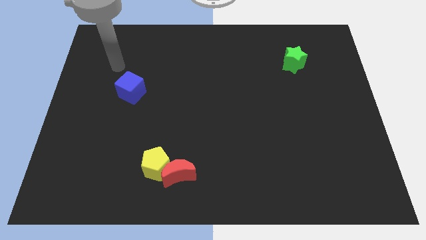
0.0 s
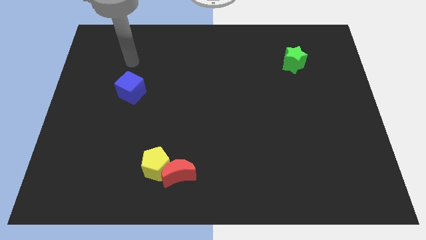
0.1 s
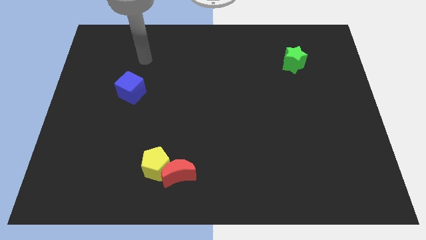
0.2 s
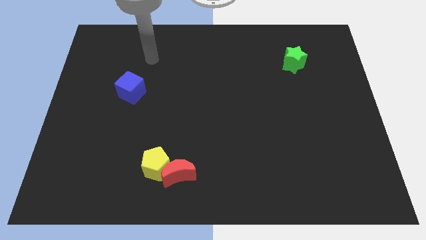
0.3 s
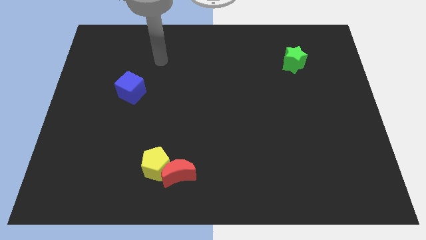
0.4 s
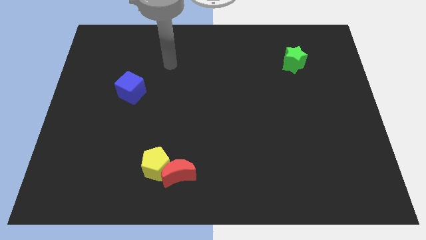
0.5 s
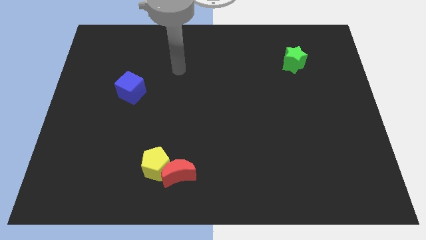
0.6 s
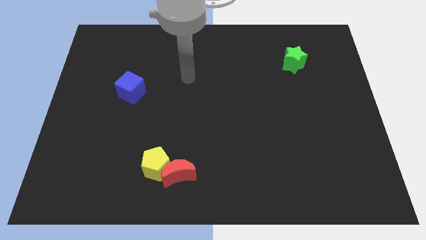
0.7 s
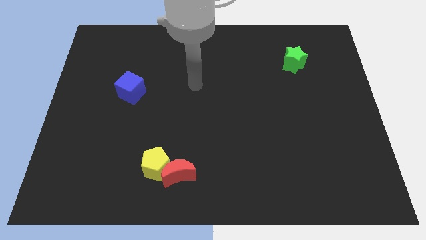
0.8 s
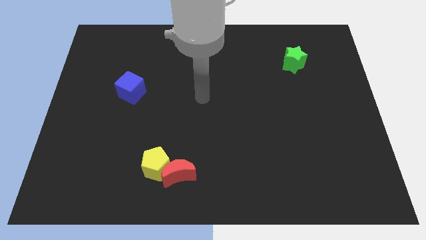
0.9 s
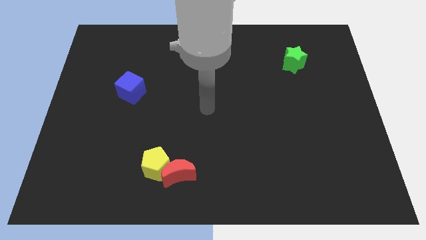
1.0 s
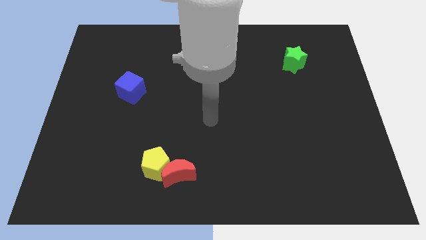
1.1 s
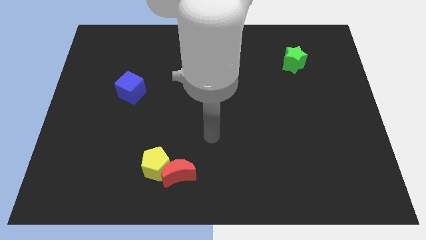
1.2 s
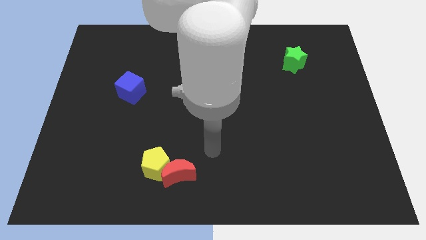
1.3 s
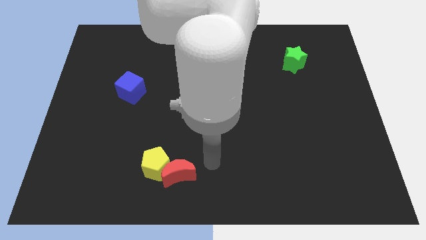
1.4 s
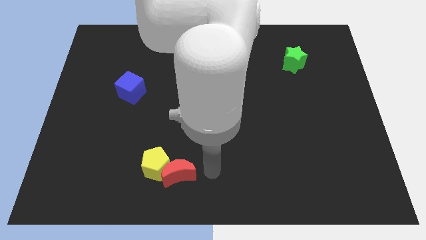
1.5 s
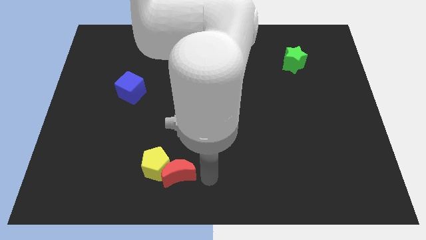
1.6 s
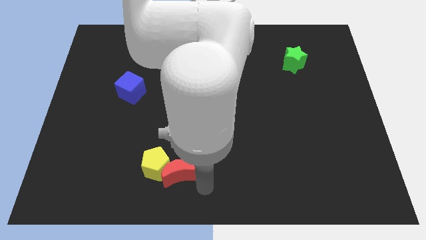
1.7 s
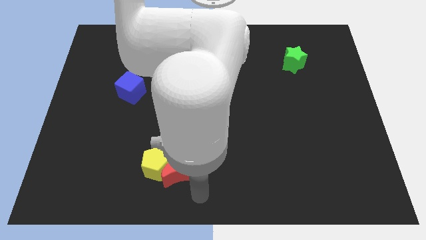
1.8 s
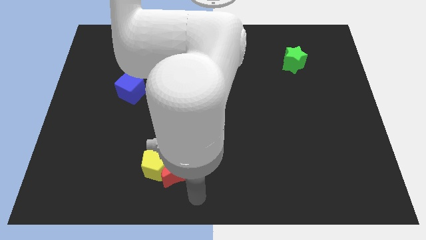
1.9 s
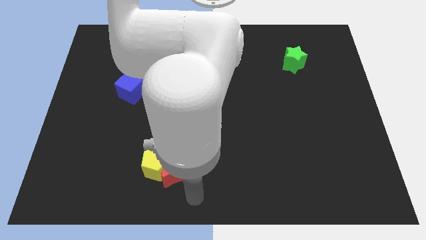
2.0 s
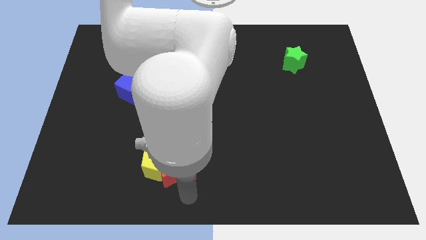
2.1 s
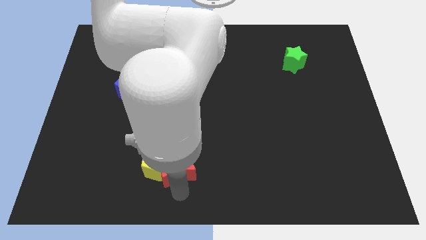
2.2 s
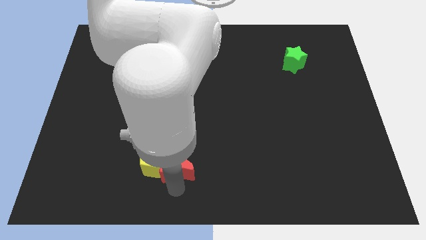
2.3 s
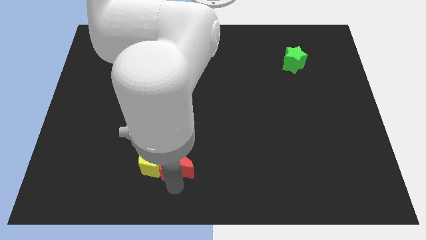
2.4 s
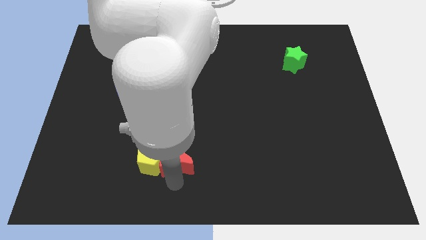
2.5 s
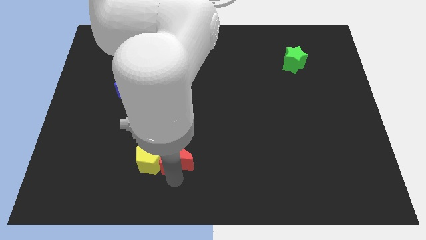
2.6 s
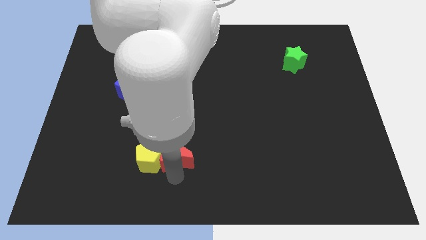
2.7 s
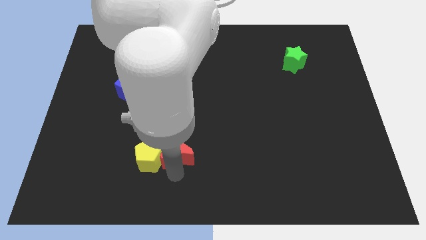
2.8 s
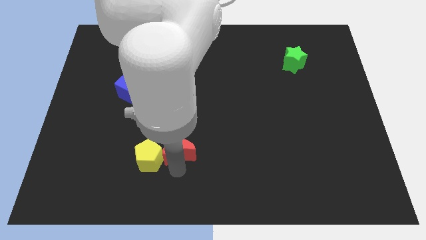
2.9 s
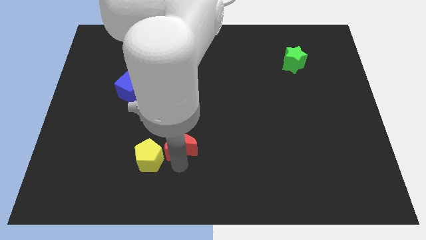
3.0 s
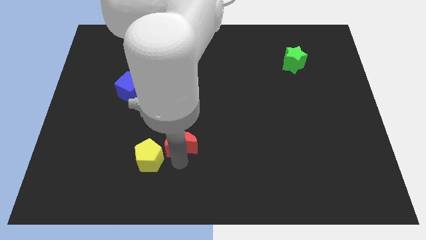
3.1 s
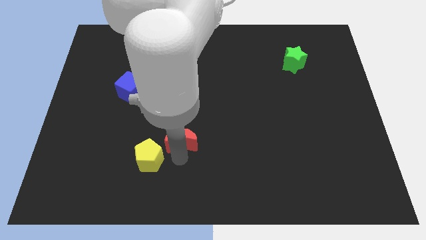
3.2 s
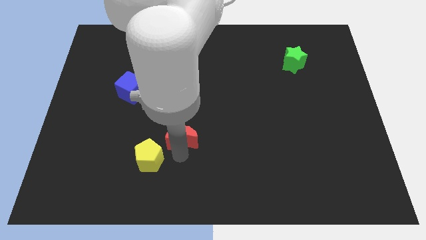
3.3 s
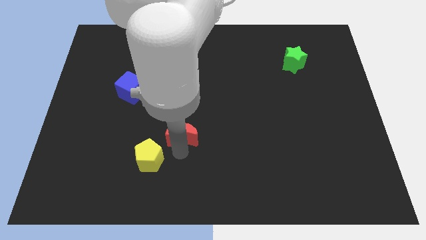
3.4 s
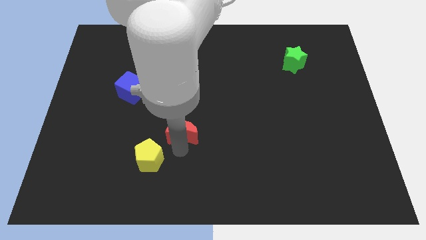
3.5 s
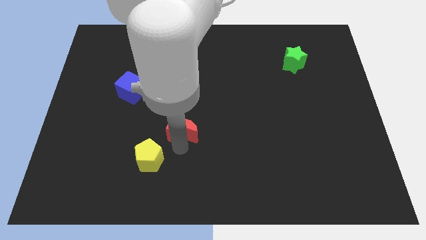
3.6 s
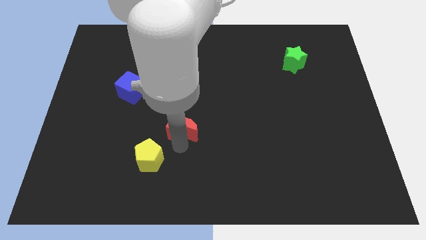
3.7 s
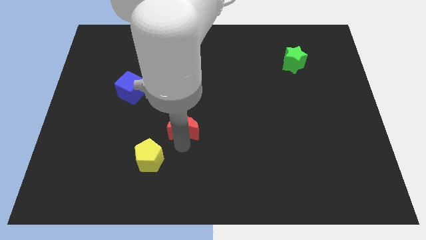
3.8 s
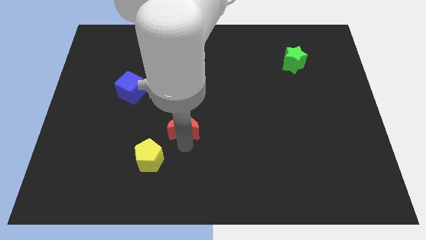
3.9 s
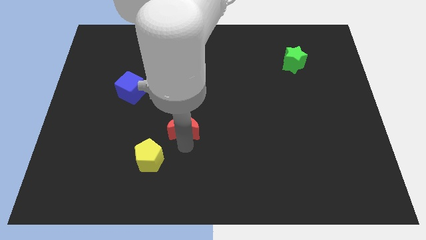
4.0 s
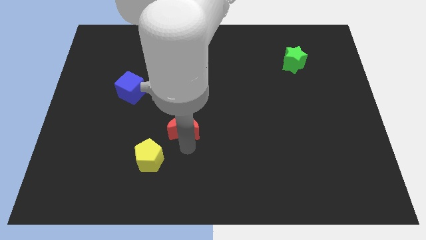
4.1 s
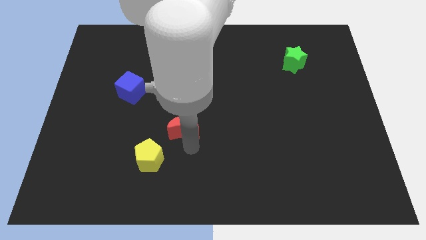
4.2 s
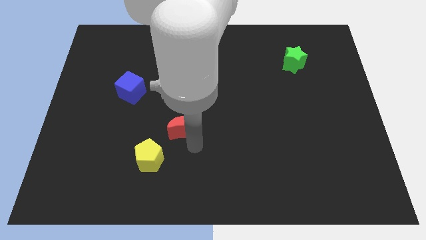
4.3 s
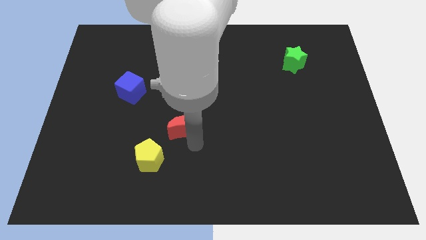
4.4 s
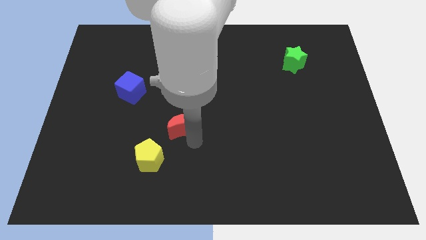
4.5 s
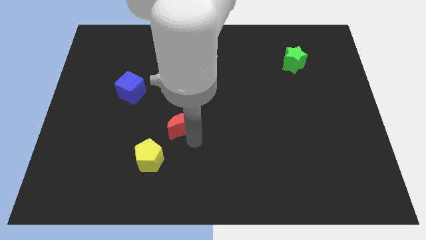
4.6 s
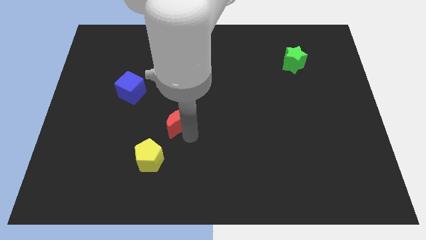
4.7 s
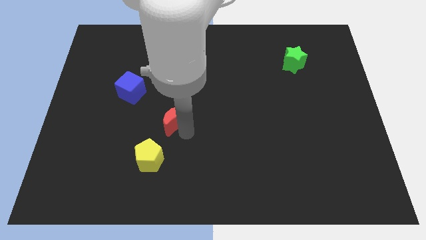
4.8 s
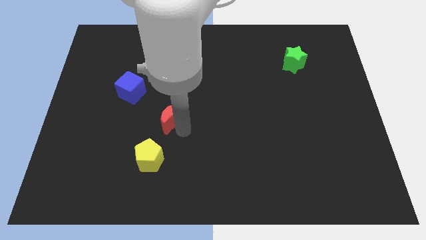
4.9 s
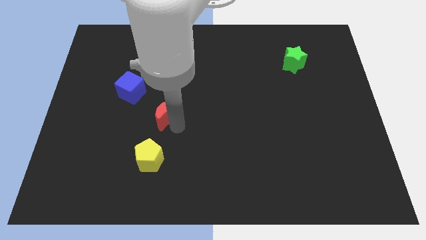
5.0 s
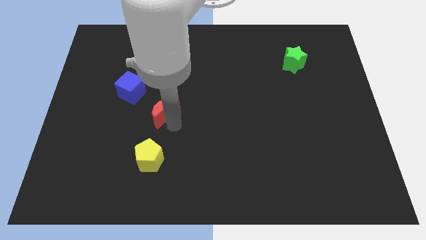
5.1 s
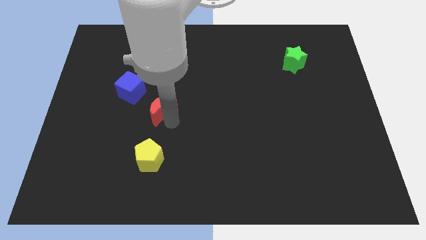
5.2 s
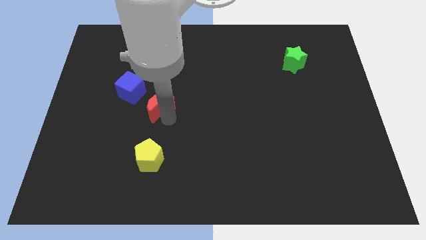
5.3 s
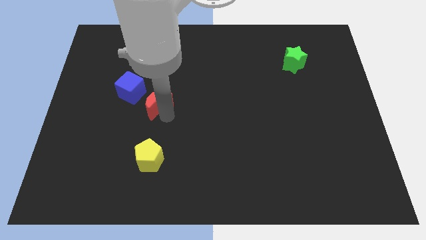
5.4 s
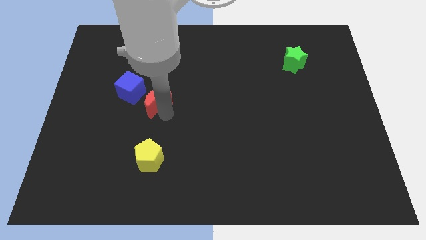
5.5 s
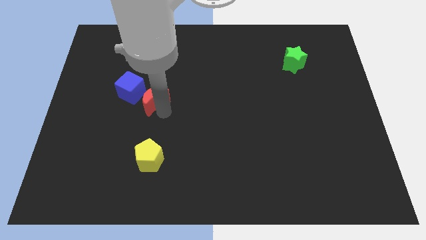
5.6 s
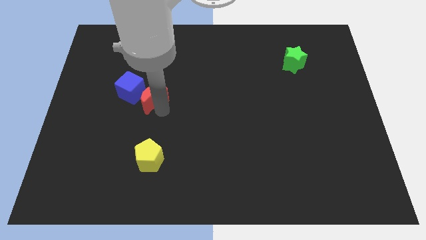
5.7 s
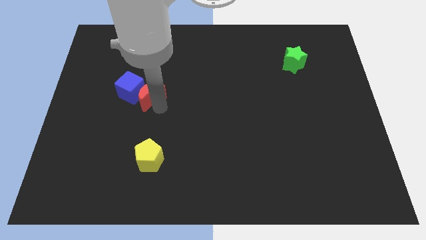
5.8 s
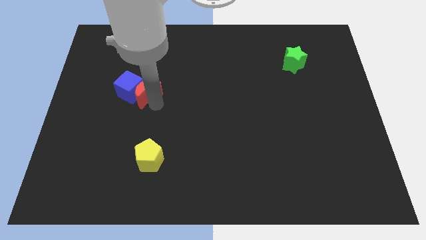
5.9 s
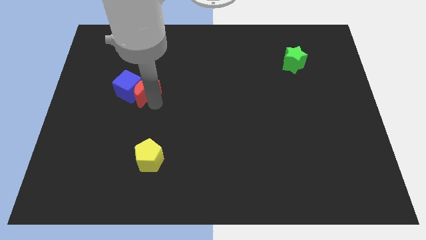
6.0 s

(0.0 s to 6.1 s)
slide the red moon close to the blue block

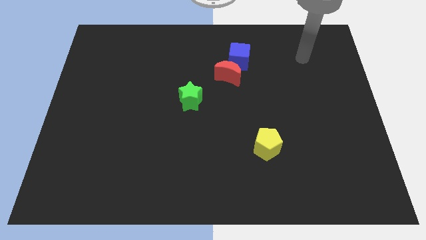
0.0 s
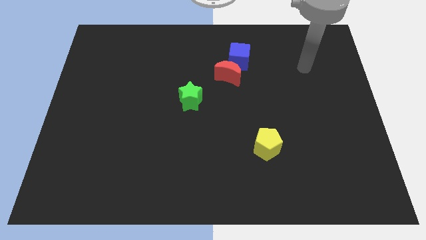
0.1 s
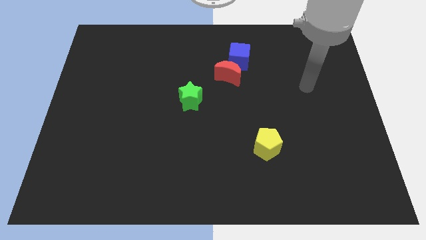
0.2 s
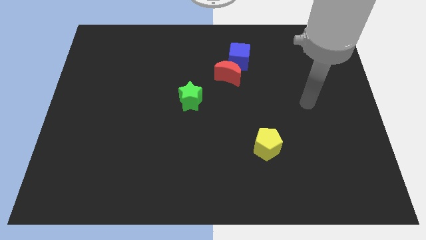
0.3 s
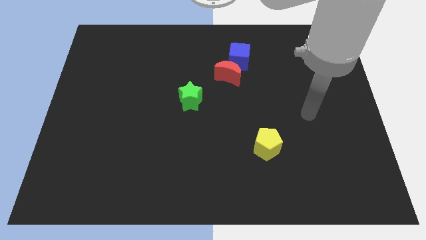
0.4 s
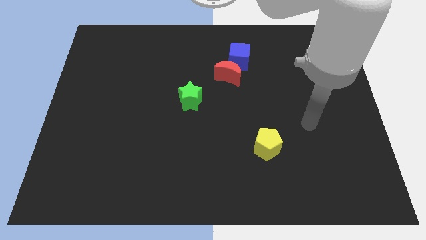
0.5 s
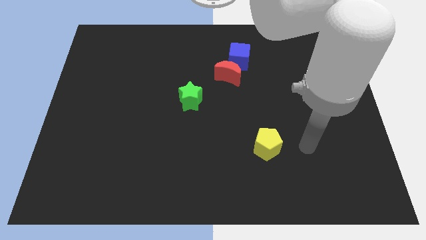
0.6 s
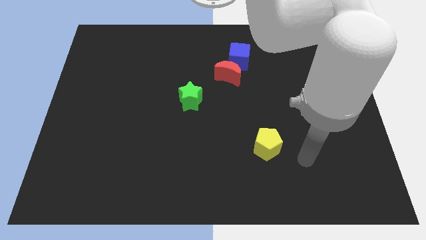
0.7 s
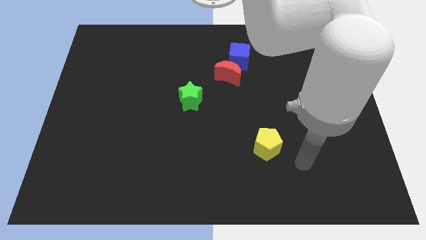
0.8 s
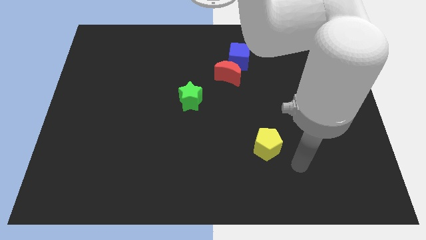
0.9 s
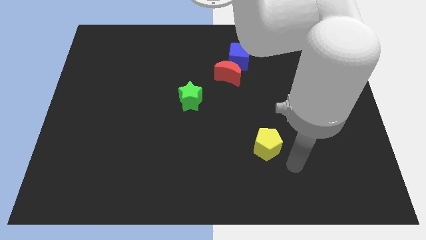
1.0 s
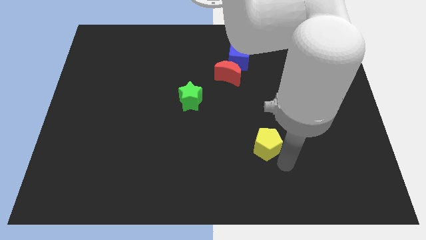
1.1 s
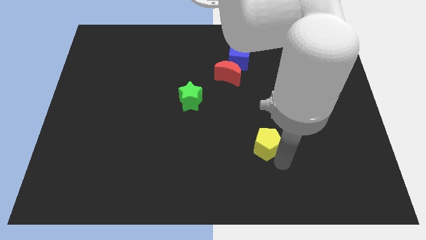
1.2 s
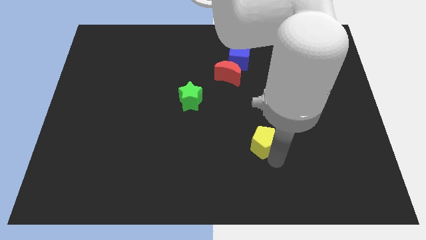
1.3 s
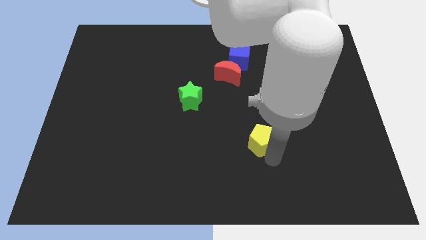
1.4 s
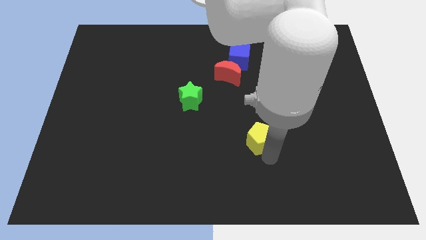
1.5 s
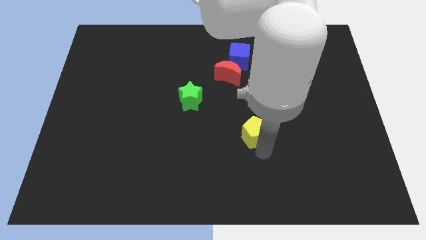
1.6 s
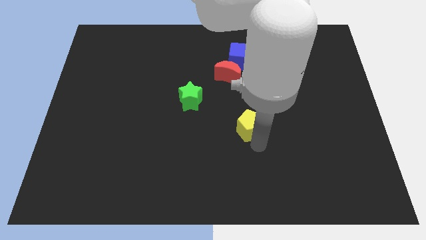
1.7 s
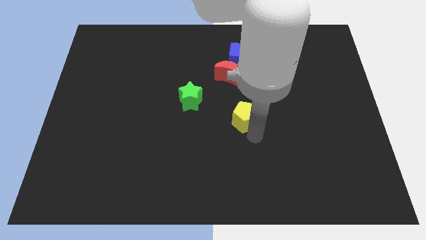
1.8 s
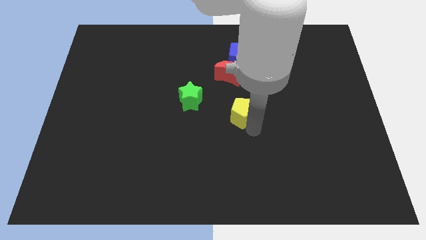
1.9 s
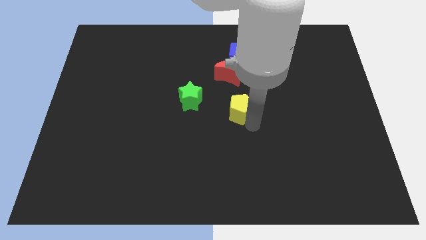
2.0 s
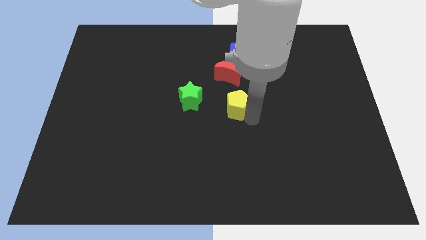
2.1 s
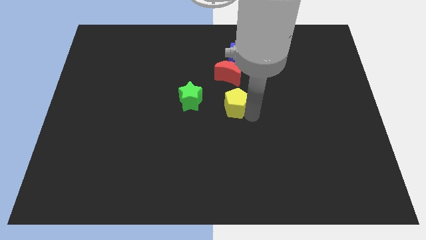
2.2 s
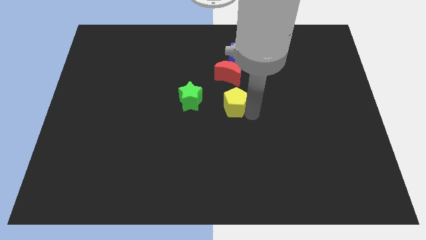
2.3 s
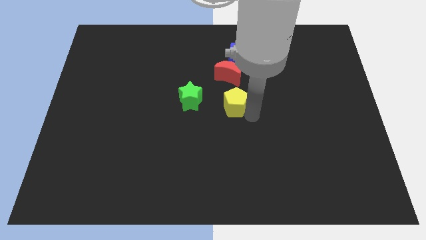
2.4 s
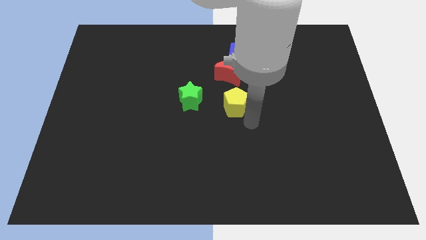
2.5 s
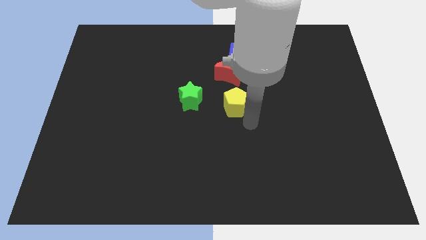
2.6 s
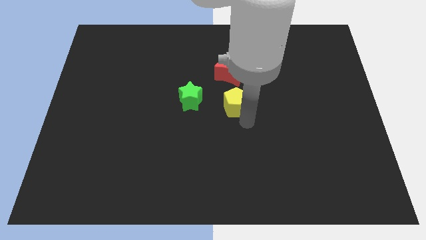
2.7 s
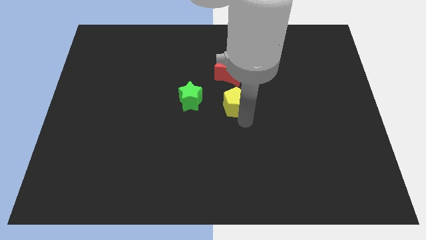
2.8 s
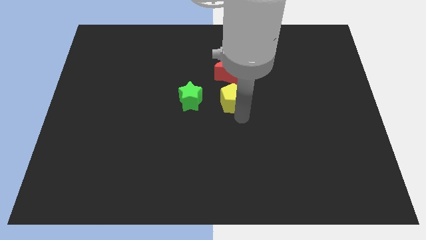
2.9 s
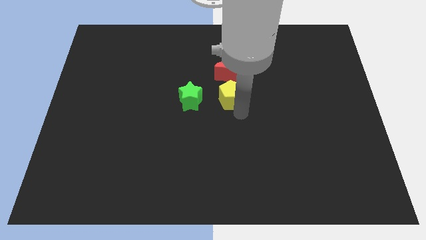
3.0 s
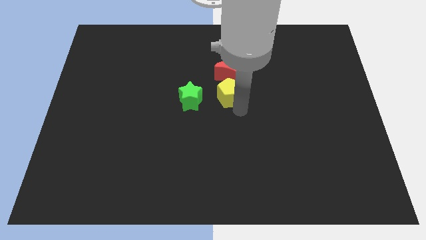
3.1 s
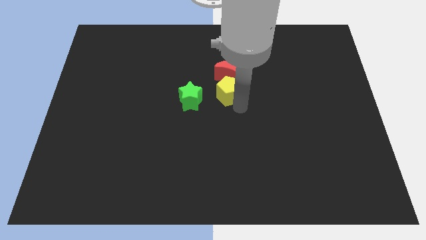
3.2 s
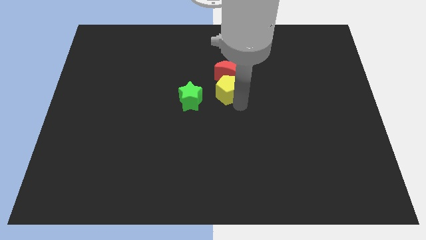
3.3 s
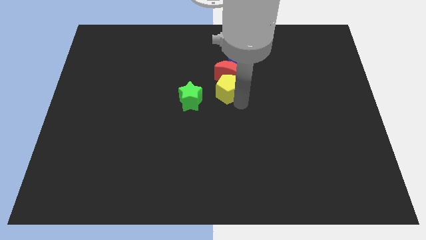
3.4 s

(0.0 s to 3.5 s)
put the pentagon to the red block
